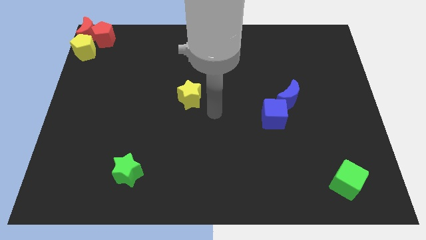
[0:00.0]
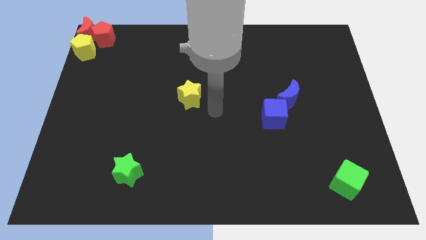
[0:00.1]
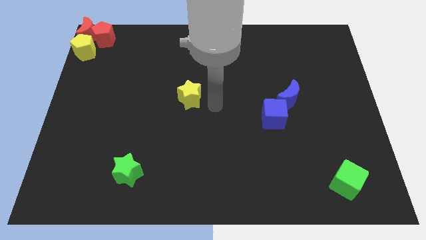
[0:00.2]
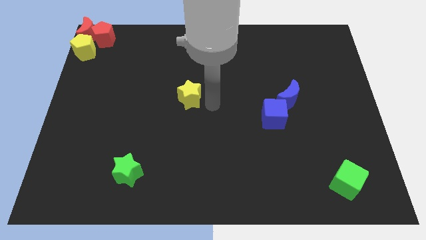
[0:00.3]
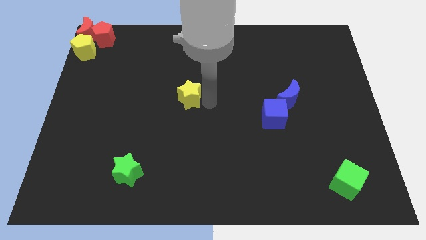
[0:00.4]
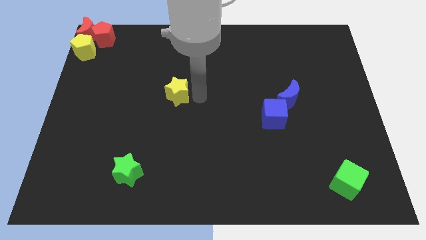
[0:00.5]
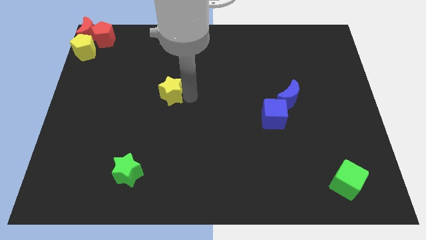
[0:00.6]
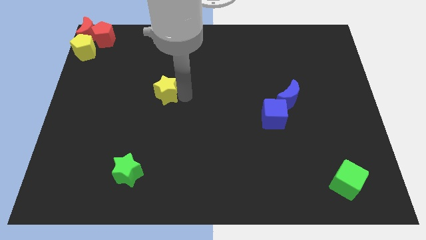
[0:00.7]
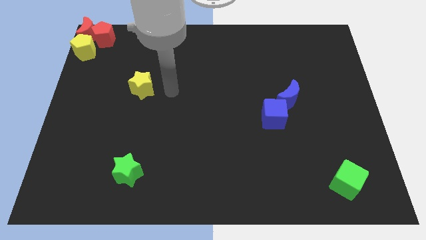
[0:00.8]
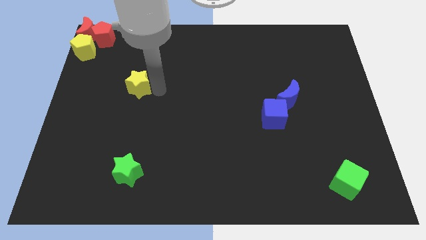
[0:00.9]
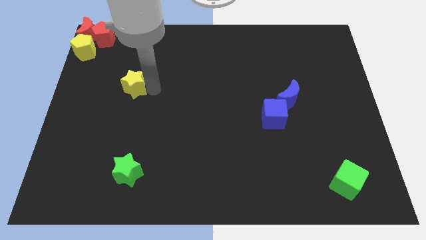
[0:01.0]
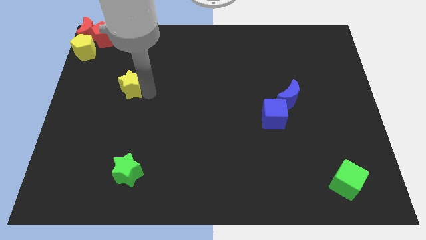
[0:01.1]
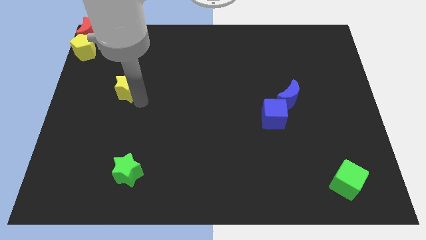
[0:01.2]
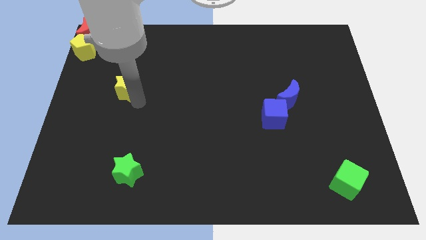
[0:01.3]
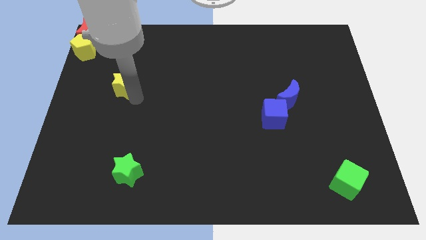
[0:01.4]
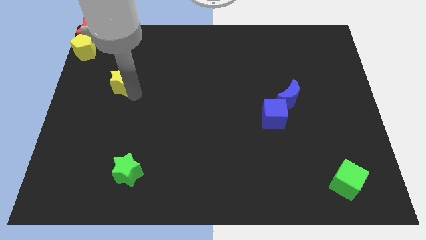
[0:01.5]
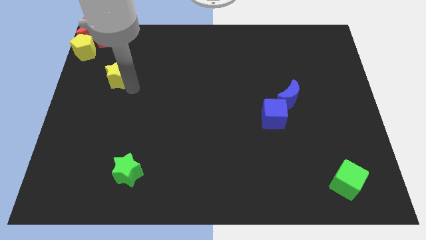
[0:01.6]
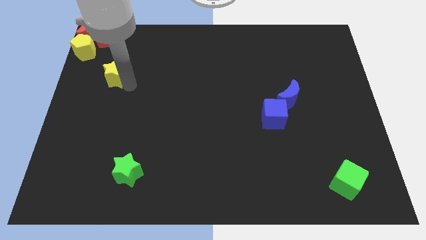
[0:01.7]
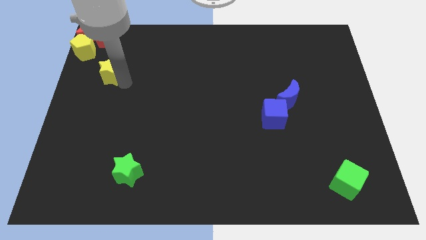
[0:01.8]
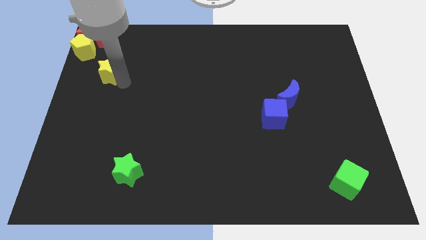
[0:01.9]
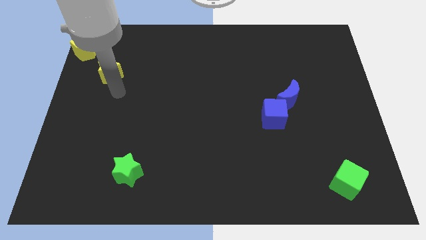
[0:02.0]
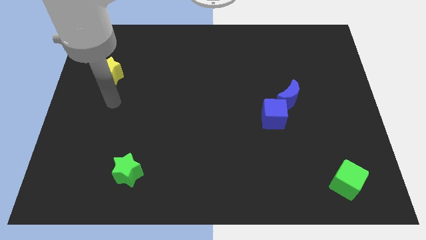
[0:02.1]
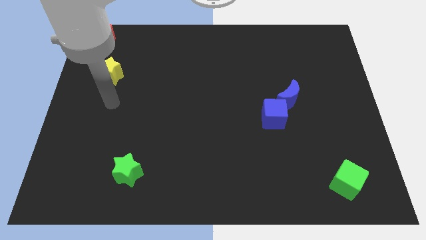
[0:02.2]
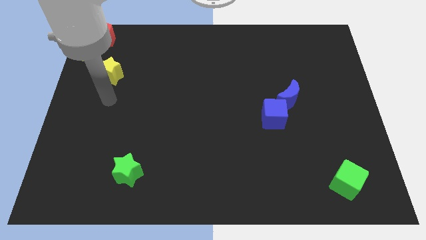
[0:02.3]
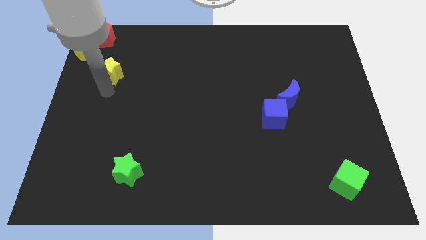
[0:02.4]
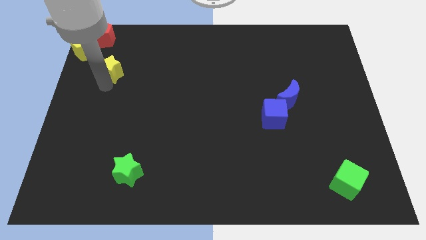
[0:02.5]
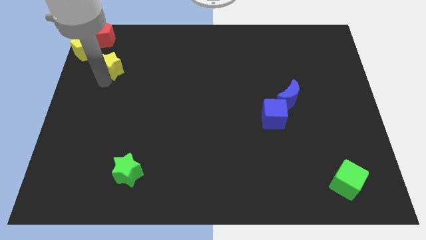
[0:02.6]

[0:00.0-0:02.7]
place the yellow star diagonally bottom right to yellow pentagon

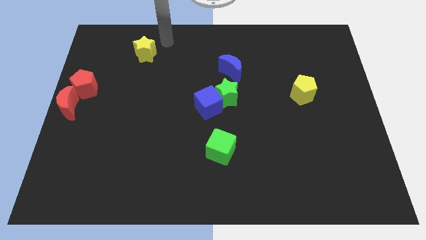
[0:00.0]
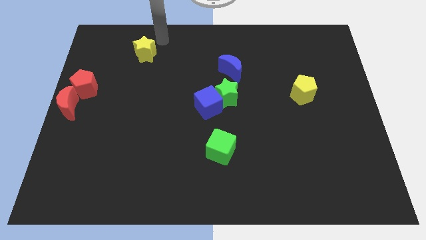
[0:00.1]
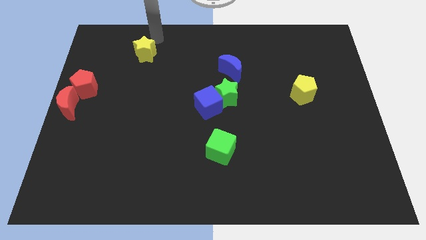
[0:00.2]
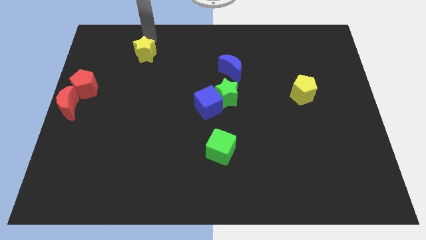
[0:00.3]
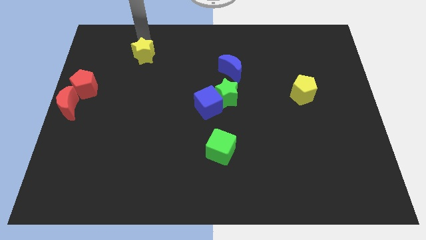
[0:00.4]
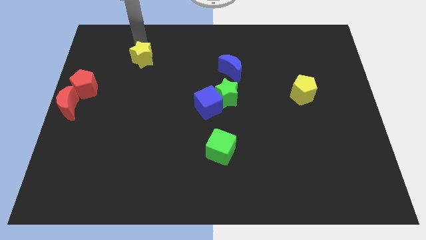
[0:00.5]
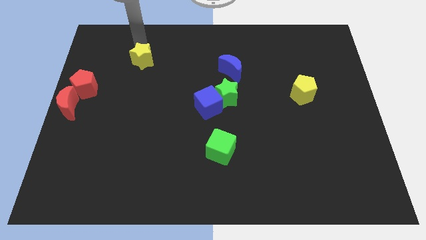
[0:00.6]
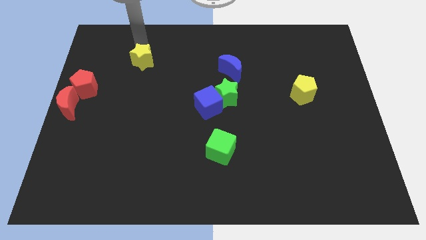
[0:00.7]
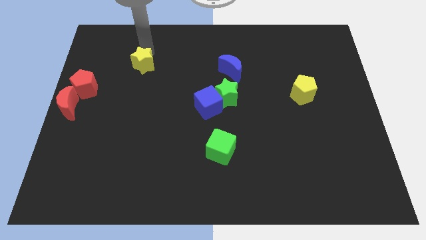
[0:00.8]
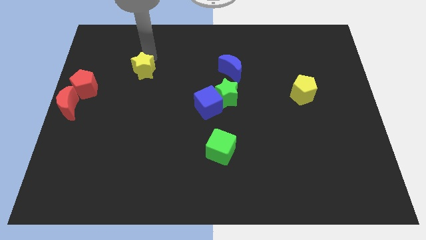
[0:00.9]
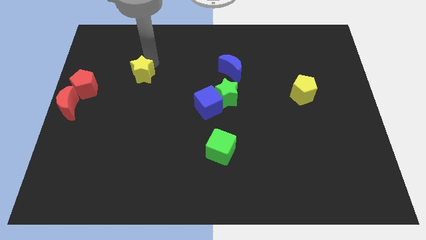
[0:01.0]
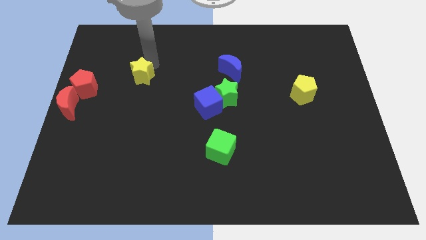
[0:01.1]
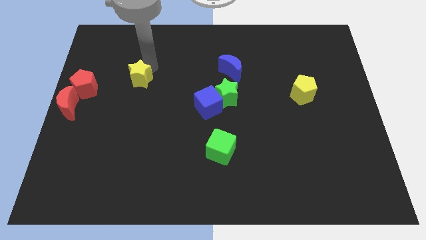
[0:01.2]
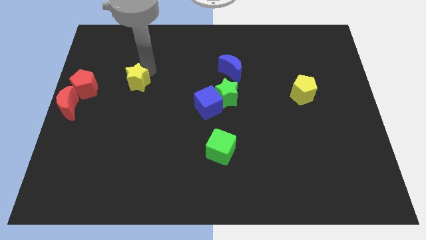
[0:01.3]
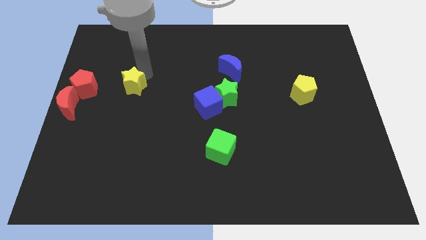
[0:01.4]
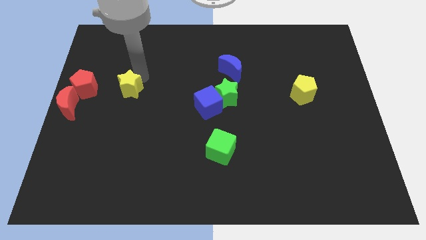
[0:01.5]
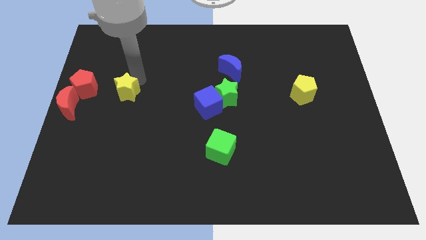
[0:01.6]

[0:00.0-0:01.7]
put the yellow star parallel right to the red pentagon

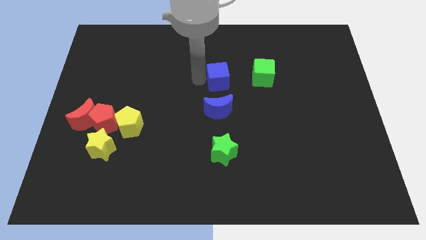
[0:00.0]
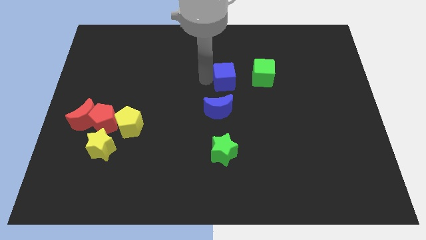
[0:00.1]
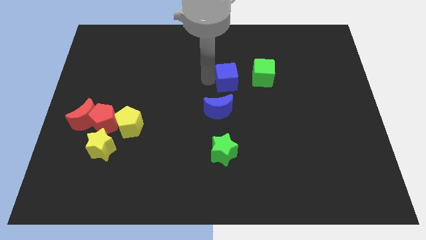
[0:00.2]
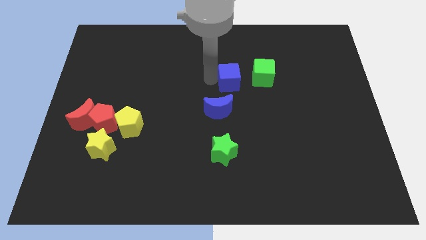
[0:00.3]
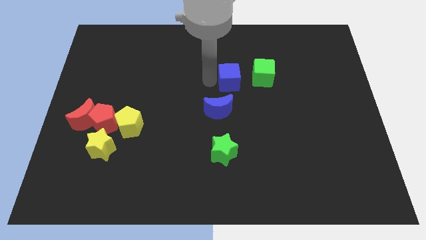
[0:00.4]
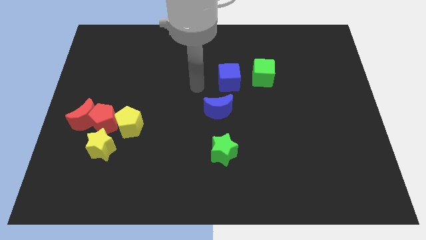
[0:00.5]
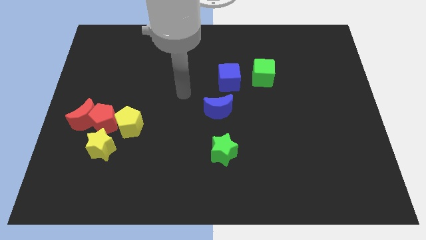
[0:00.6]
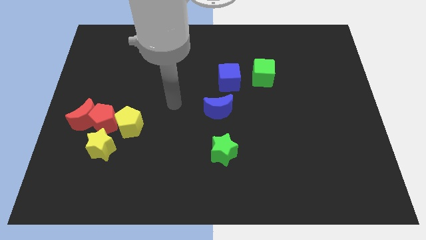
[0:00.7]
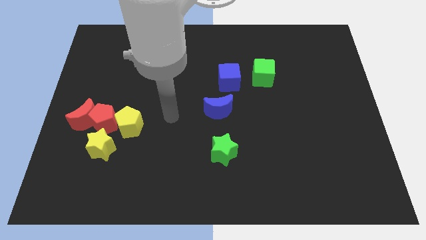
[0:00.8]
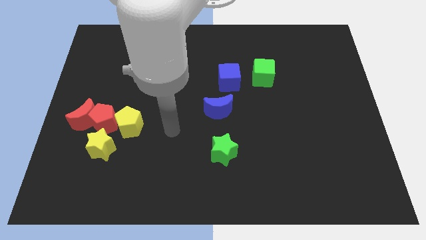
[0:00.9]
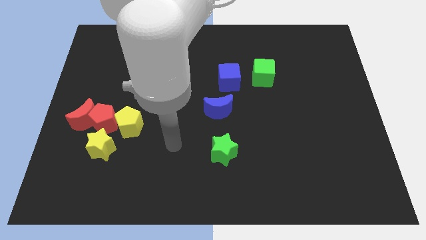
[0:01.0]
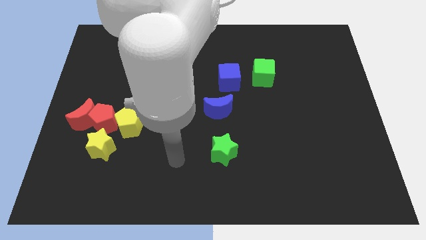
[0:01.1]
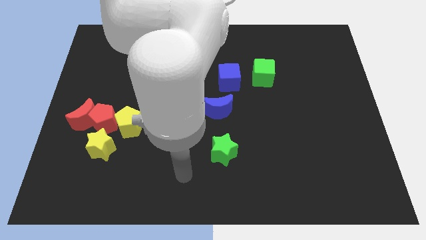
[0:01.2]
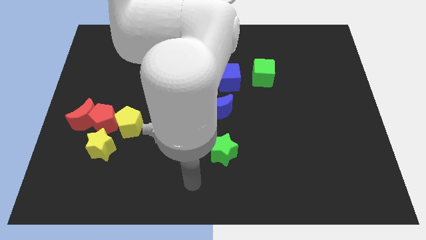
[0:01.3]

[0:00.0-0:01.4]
move the blue cube to the left of the green cube

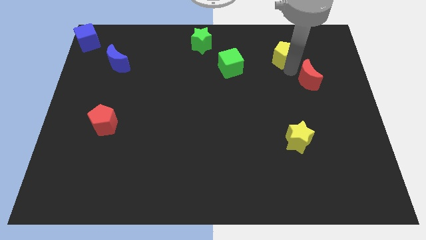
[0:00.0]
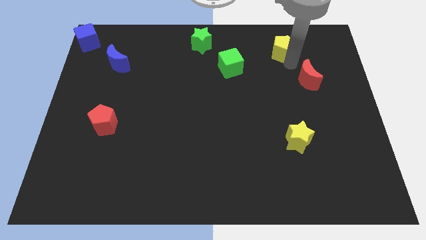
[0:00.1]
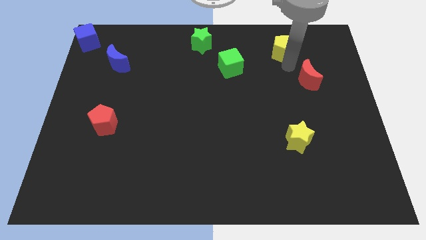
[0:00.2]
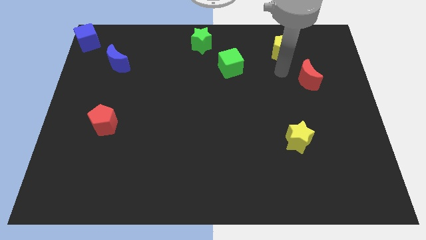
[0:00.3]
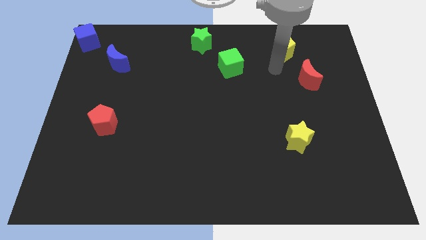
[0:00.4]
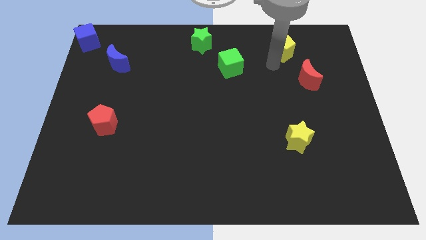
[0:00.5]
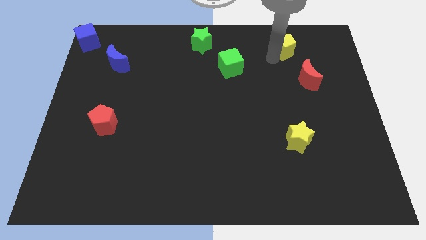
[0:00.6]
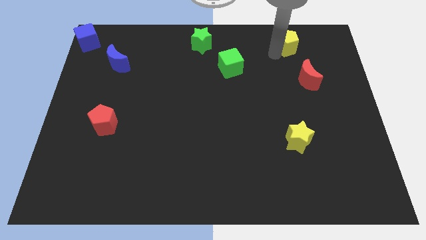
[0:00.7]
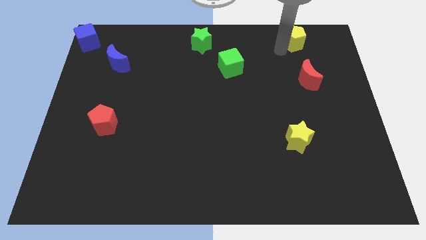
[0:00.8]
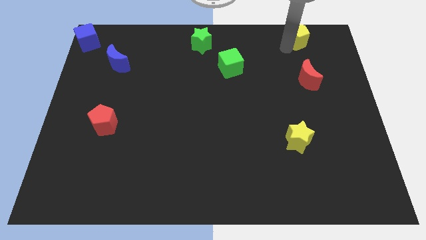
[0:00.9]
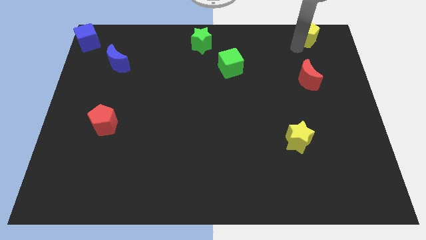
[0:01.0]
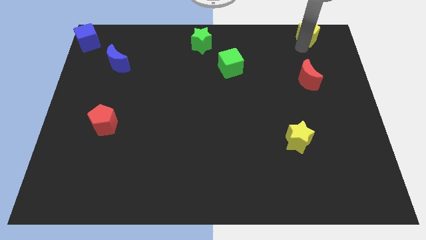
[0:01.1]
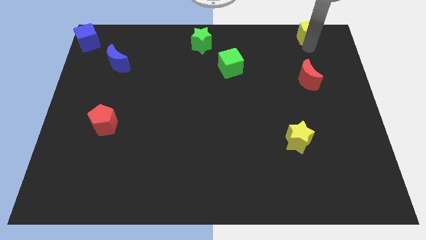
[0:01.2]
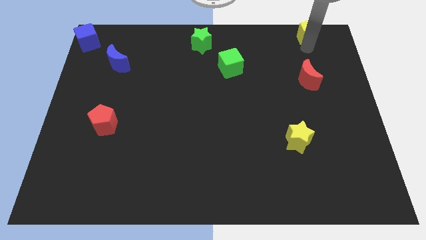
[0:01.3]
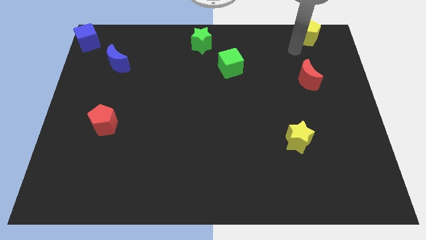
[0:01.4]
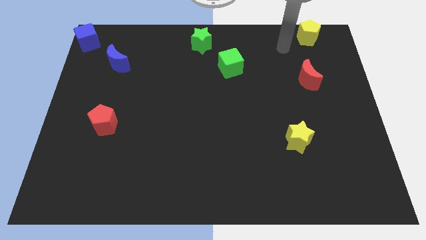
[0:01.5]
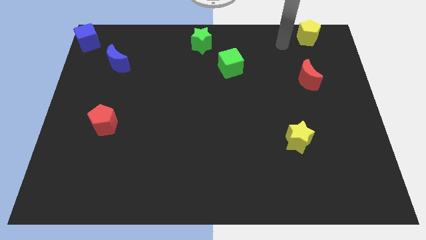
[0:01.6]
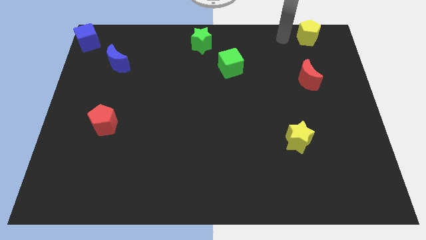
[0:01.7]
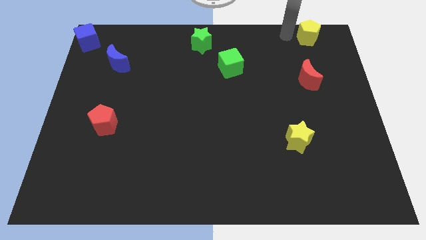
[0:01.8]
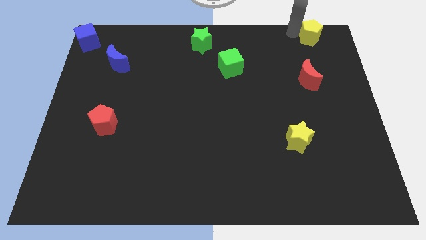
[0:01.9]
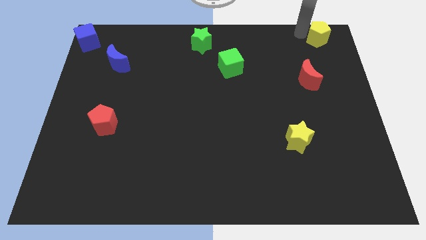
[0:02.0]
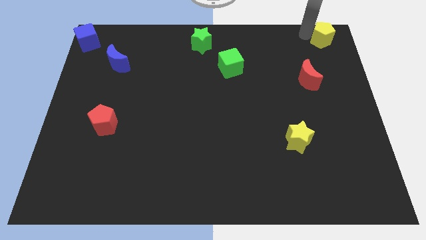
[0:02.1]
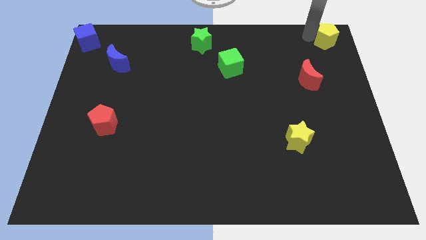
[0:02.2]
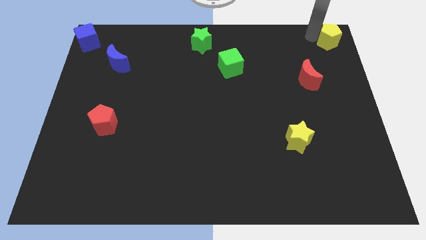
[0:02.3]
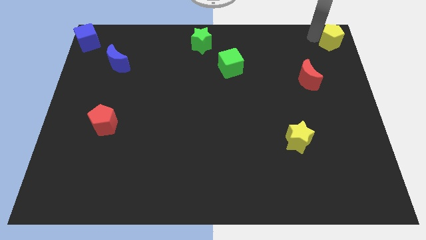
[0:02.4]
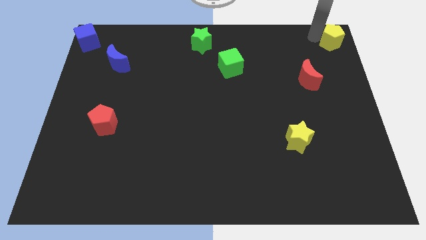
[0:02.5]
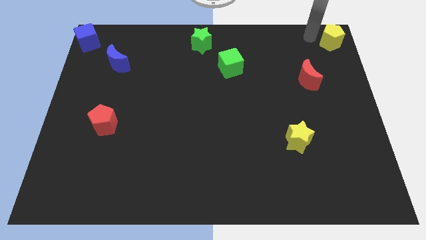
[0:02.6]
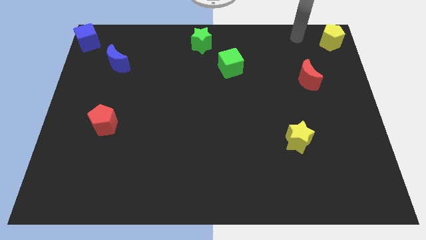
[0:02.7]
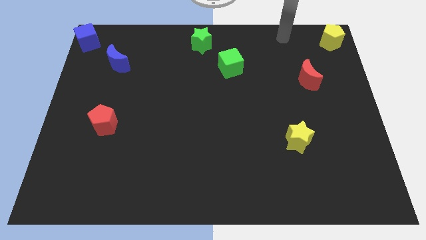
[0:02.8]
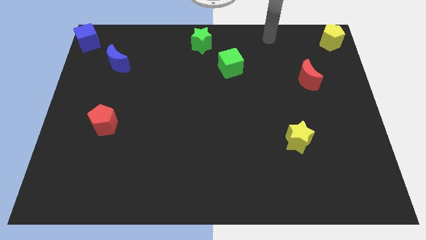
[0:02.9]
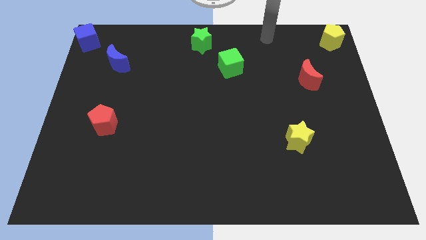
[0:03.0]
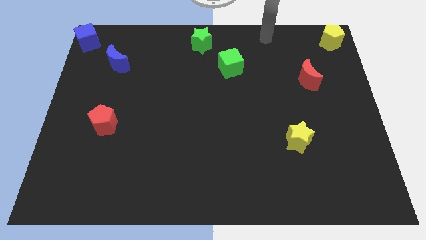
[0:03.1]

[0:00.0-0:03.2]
move the yellow pentagon to the top right
